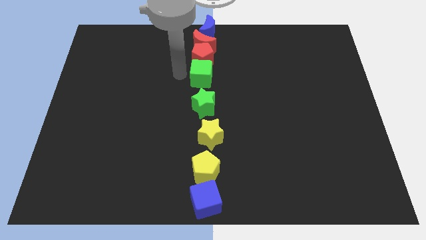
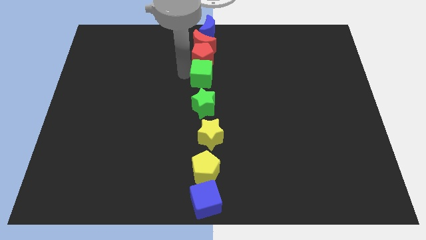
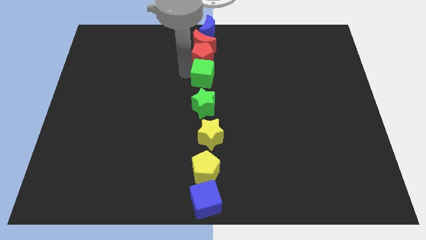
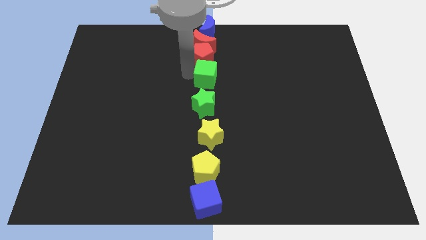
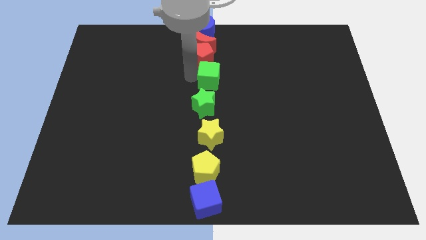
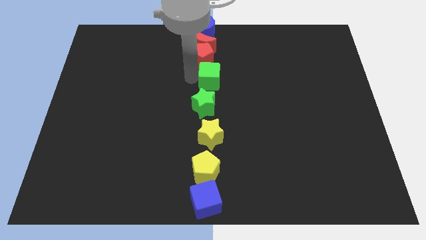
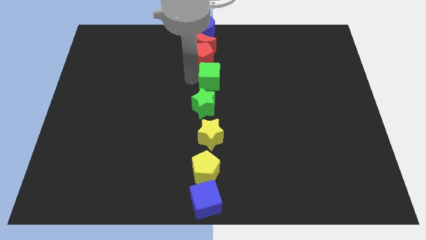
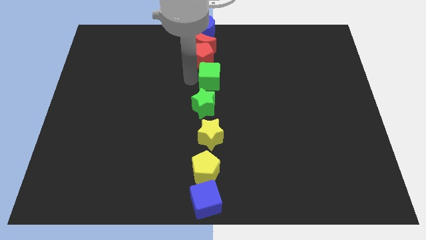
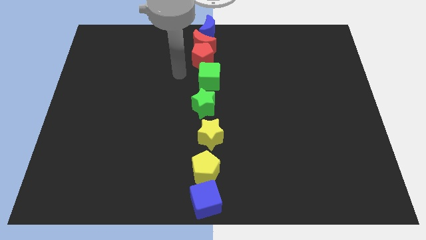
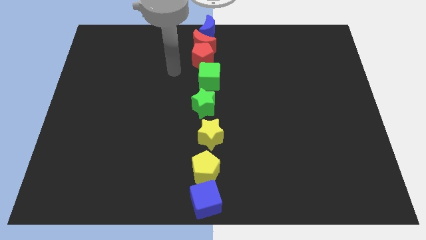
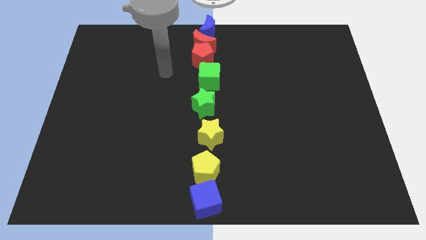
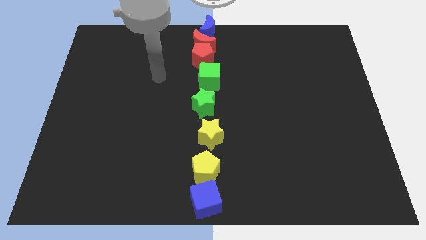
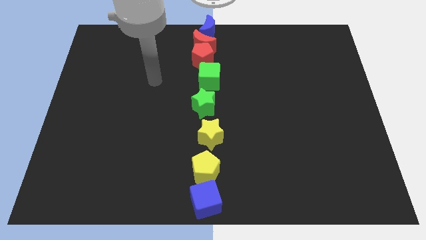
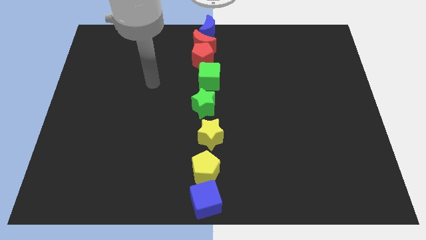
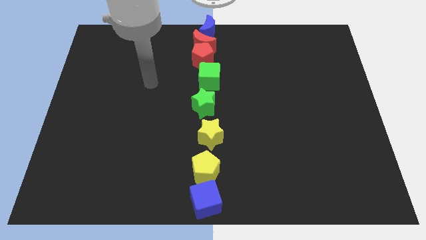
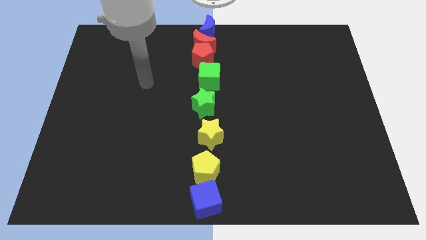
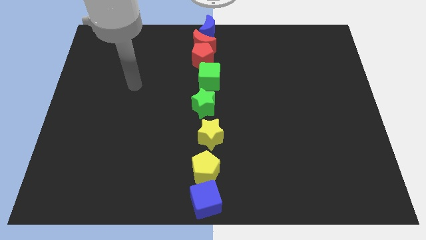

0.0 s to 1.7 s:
arrange all the blocks in a vertical line

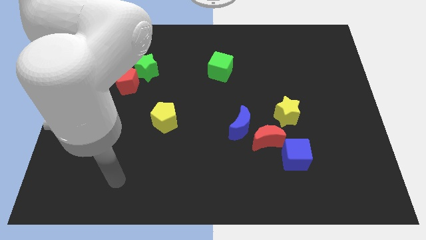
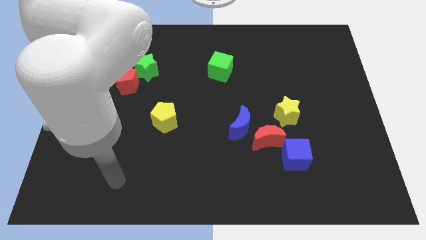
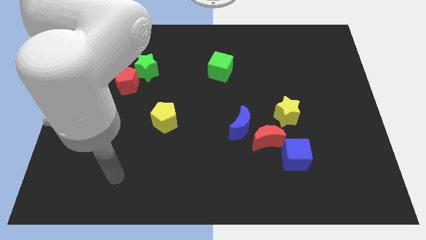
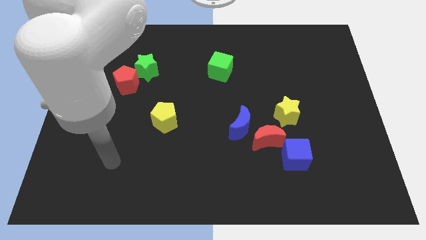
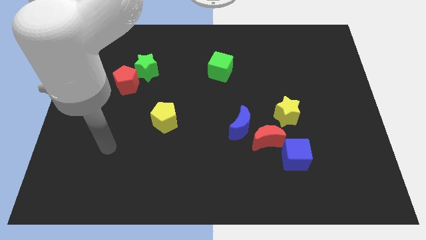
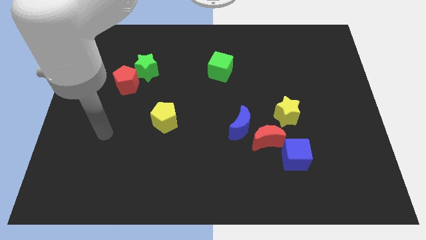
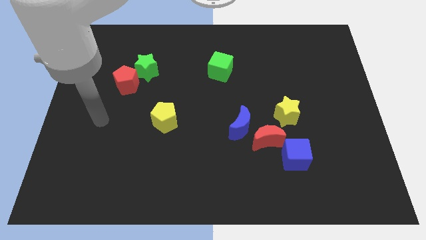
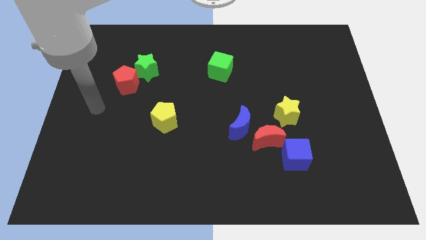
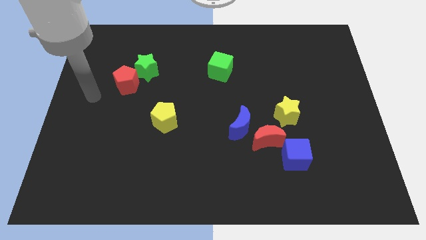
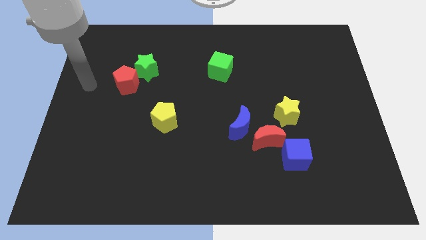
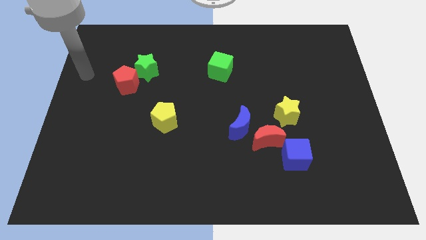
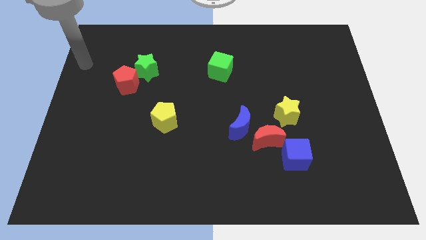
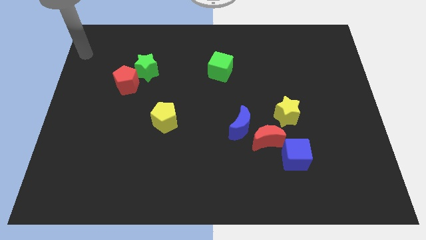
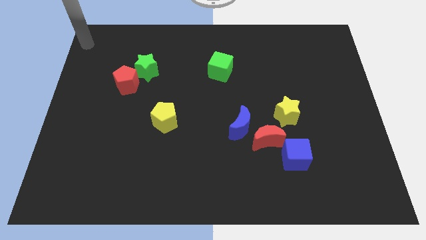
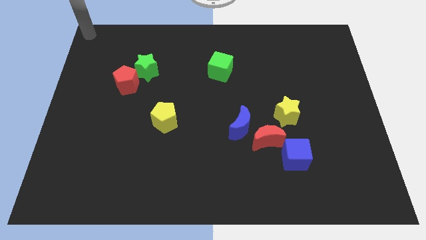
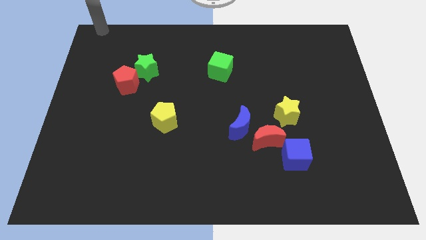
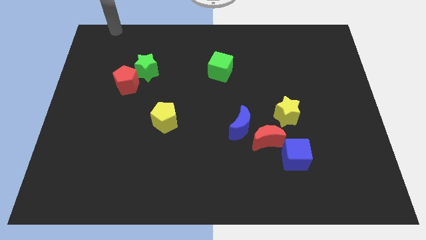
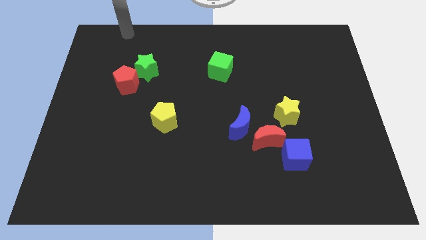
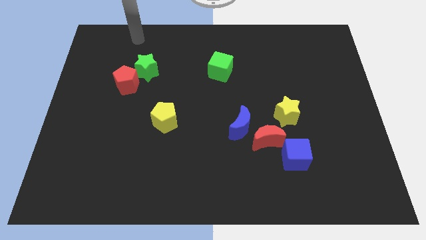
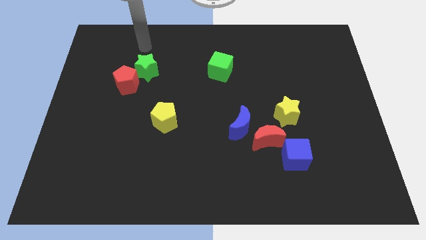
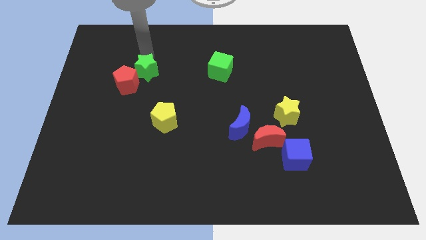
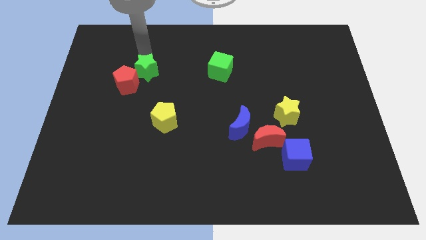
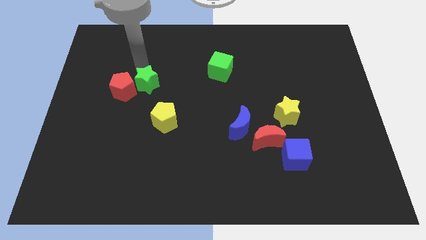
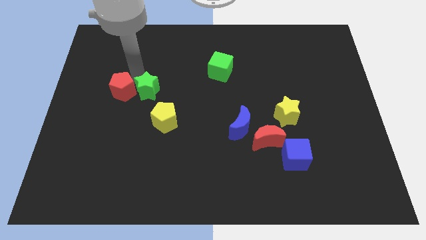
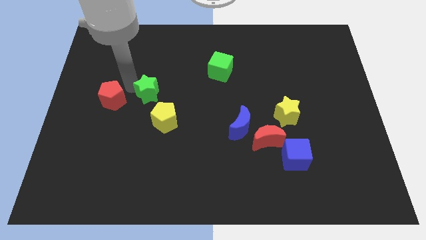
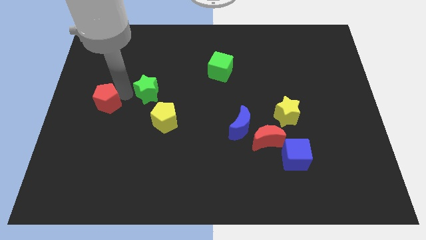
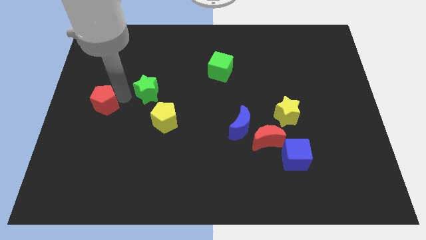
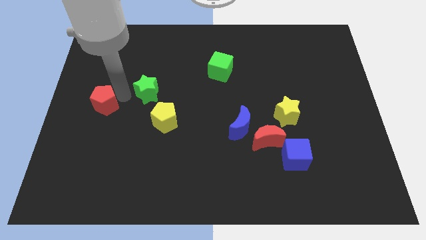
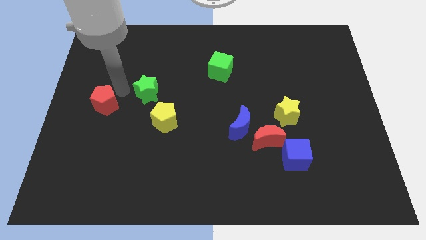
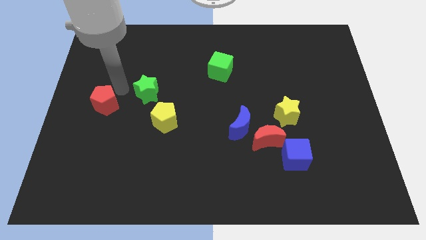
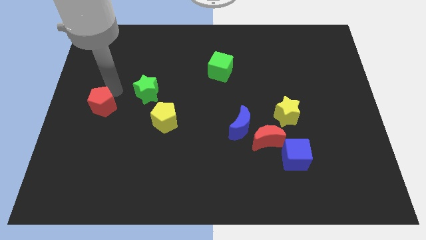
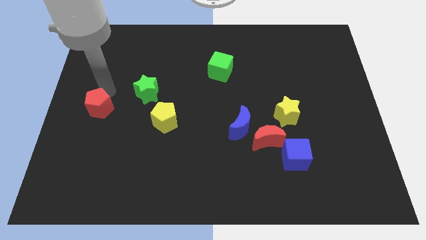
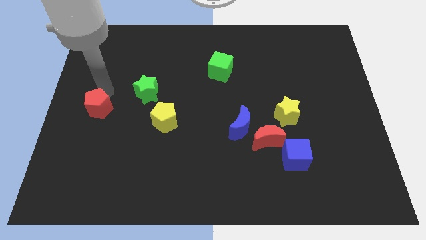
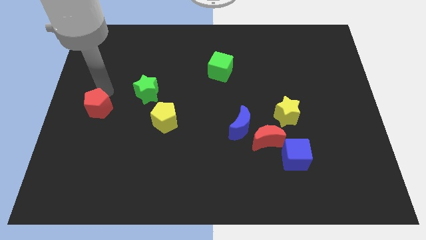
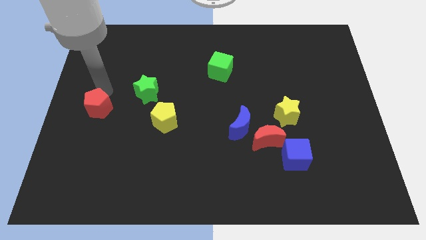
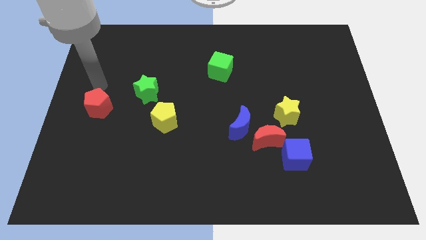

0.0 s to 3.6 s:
separate red pentagon and the green star

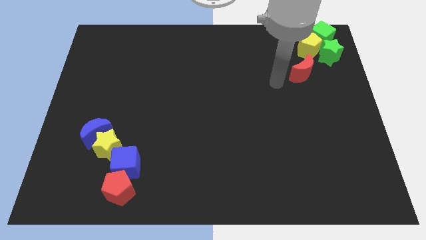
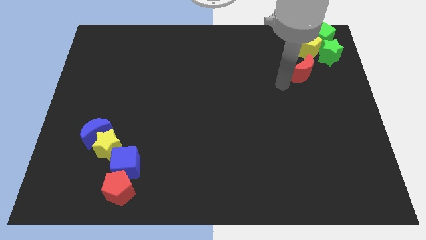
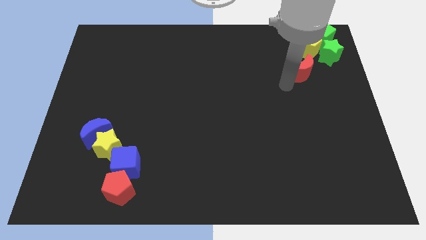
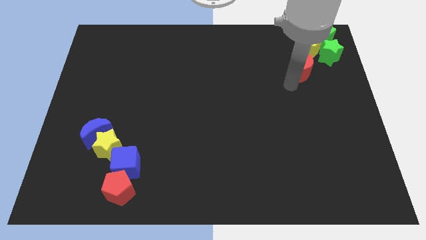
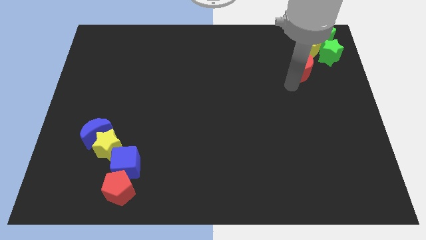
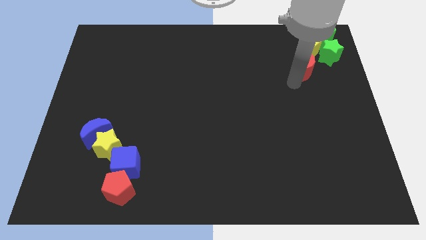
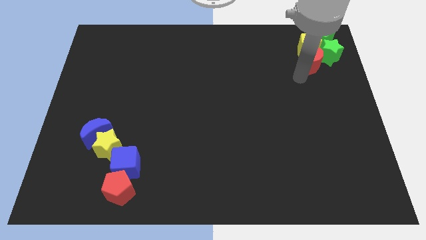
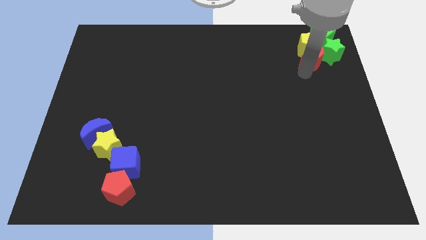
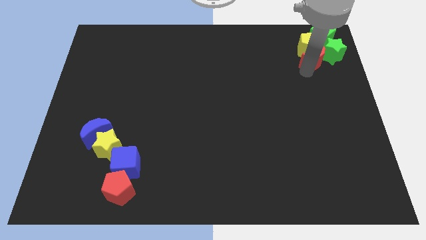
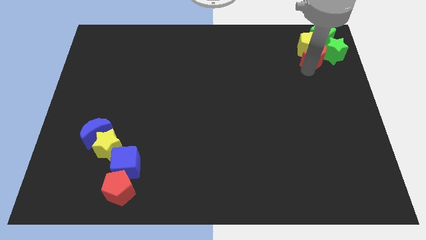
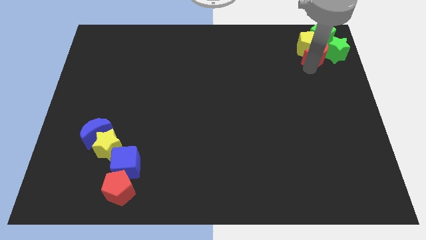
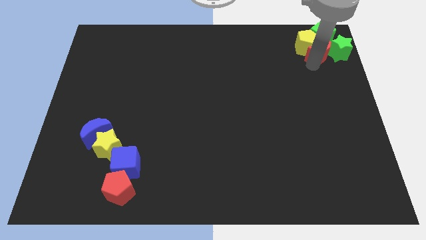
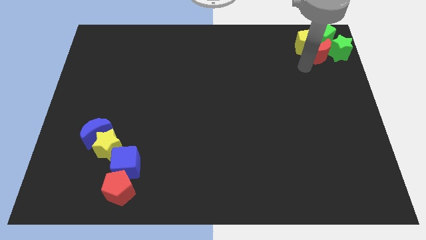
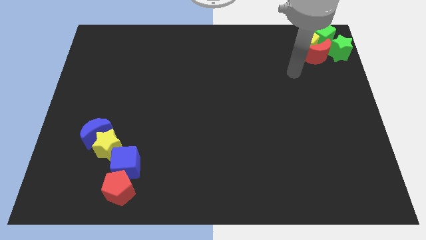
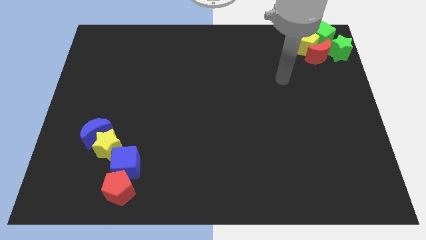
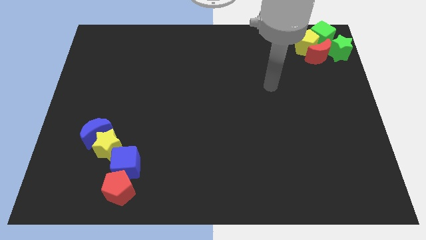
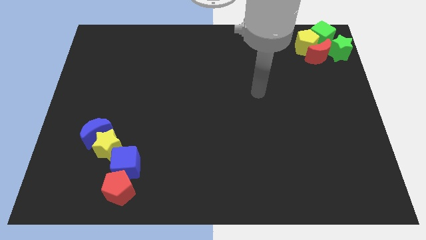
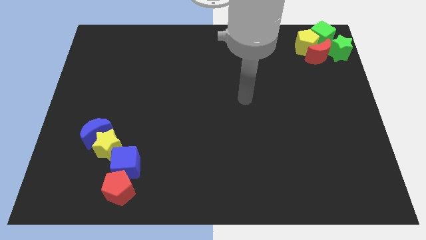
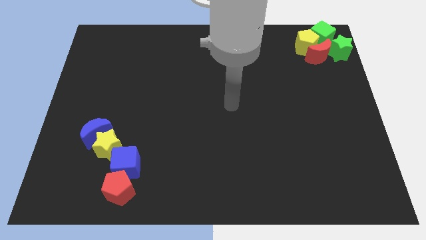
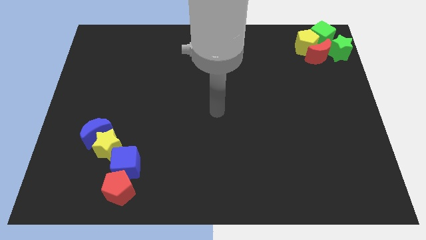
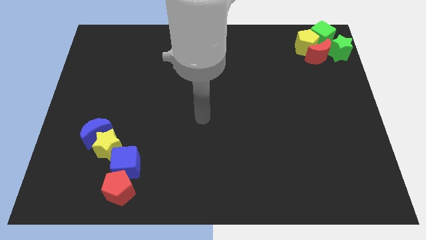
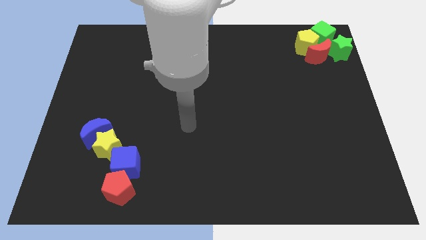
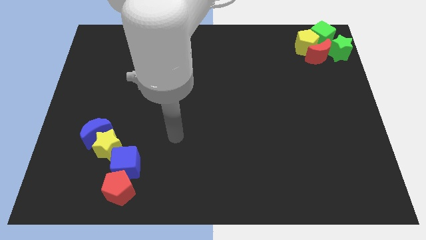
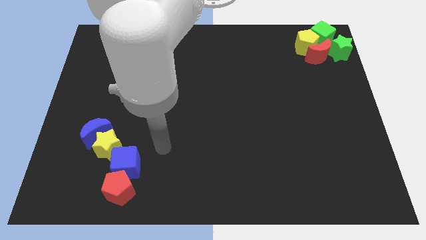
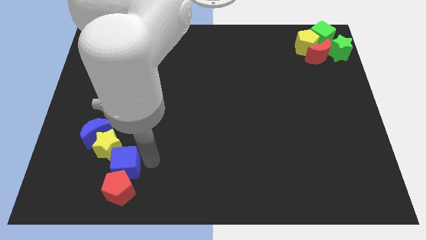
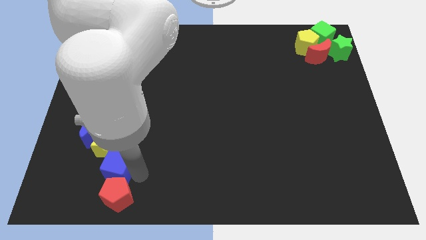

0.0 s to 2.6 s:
push the red crescent into the yellow pentagon

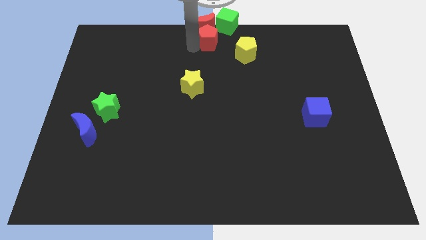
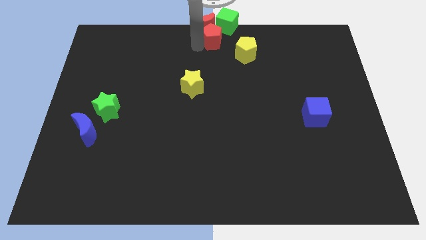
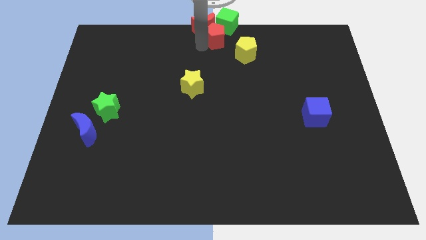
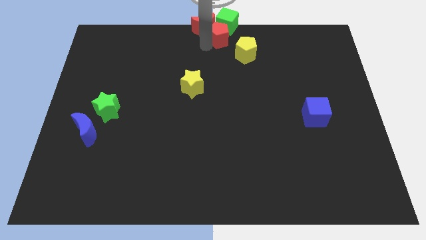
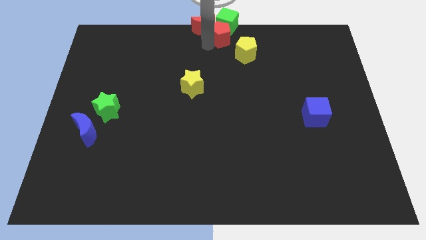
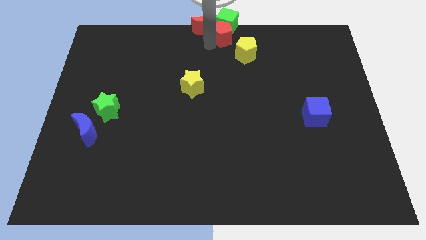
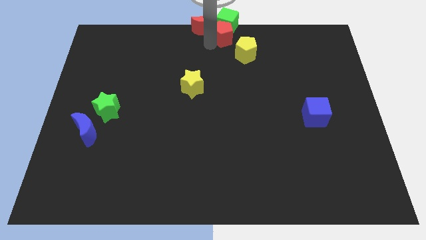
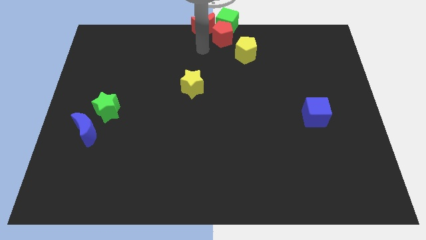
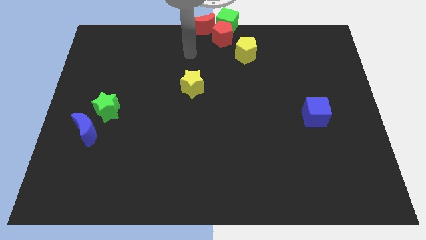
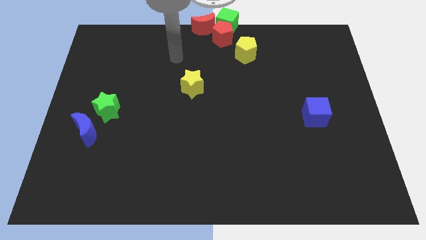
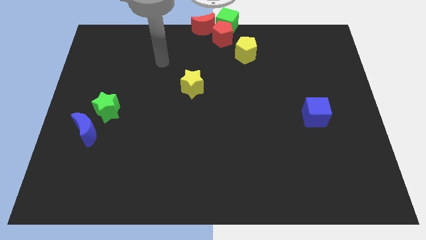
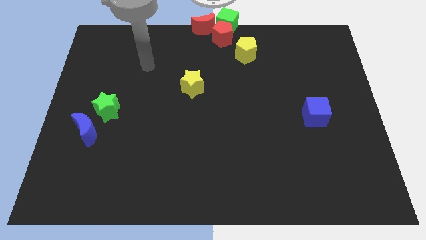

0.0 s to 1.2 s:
push the red pentagon to the bottom of the green cube
